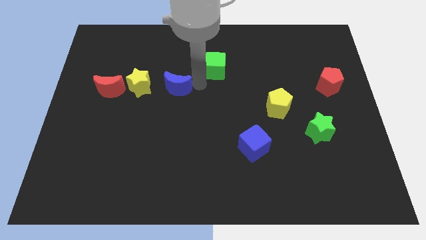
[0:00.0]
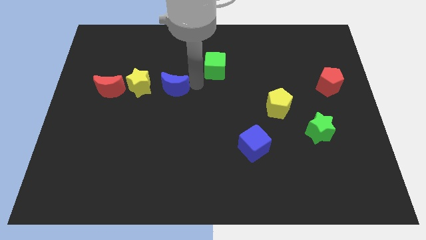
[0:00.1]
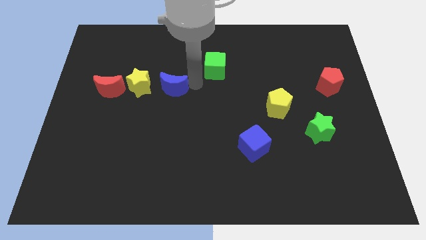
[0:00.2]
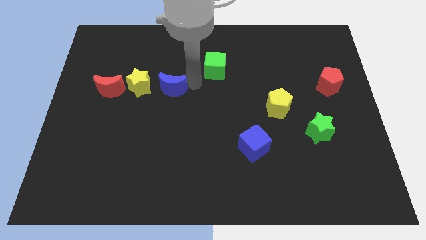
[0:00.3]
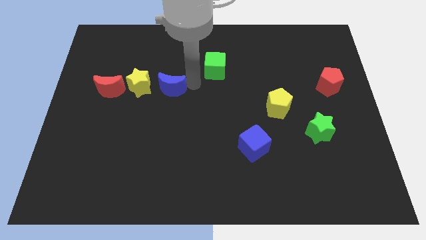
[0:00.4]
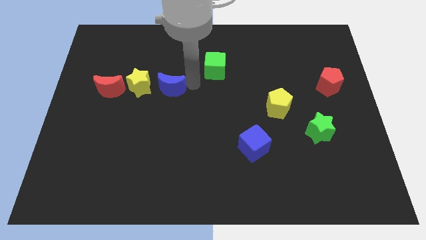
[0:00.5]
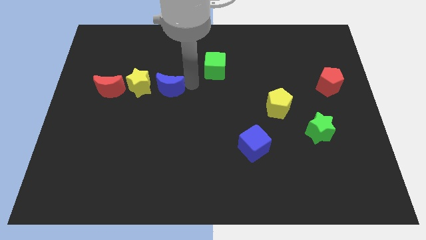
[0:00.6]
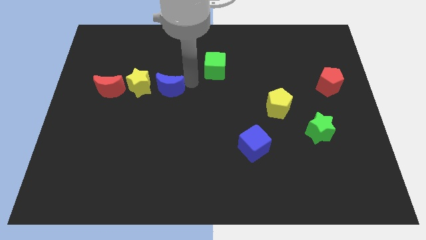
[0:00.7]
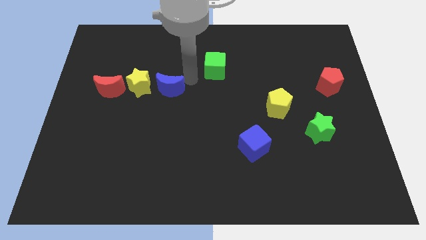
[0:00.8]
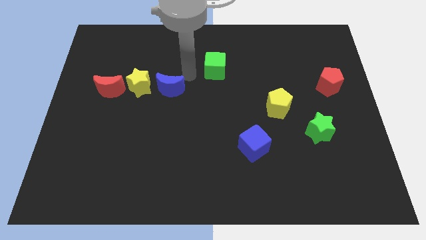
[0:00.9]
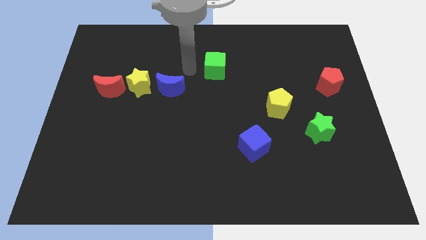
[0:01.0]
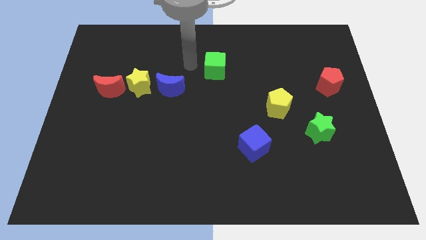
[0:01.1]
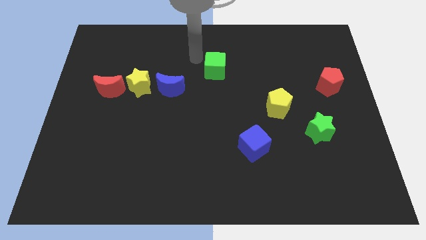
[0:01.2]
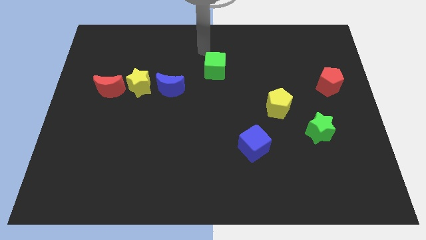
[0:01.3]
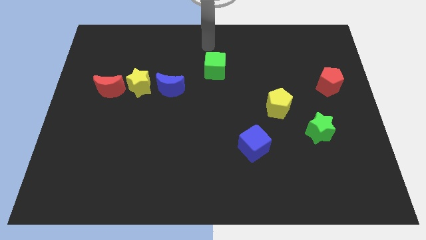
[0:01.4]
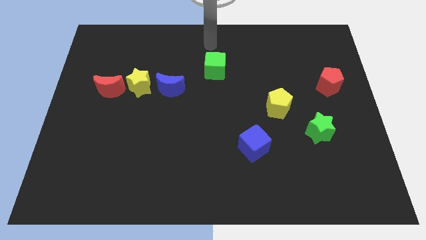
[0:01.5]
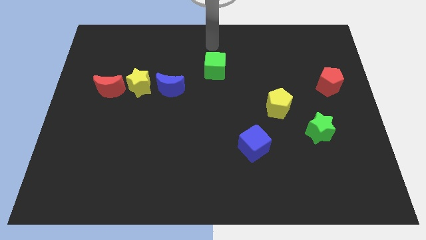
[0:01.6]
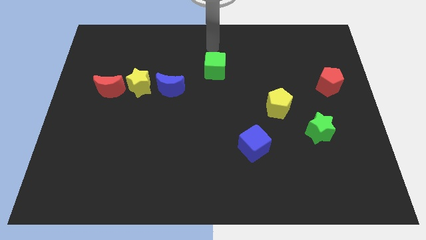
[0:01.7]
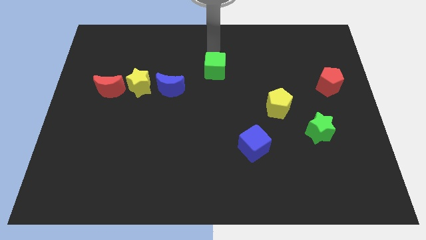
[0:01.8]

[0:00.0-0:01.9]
move the blue moon slightly to the left

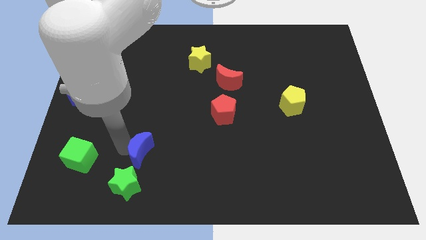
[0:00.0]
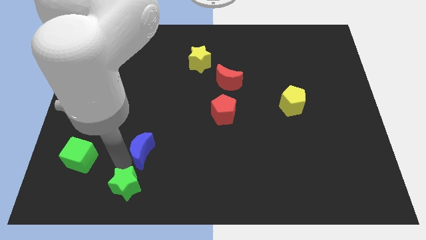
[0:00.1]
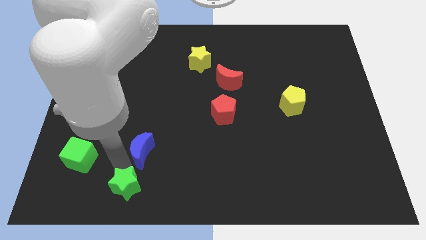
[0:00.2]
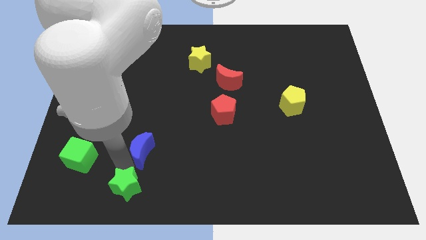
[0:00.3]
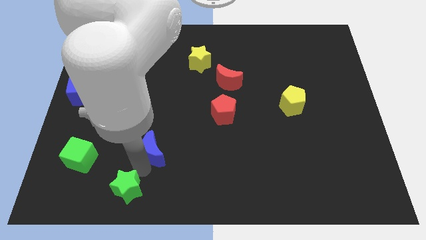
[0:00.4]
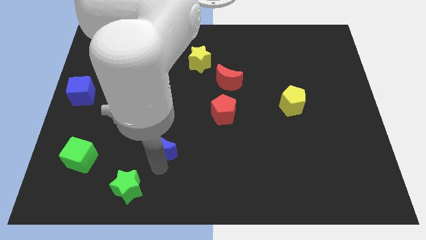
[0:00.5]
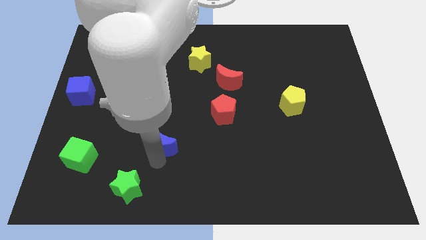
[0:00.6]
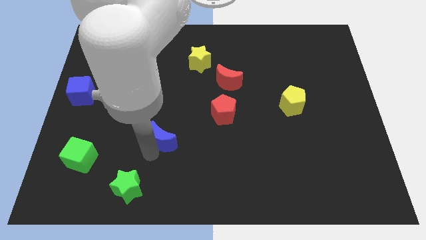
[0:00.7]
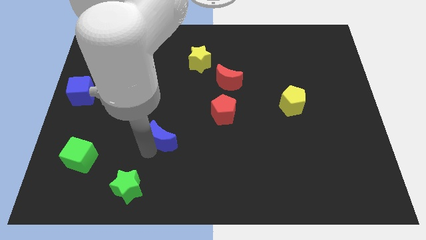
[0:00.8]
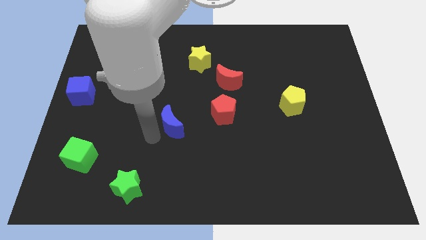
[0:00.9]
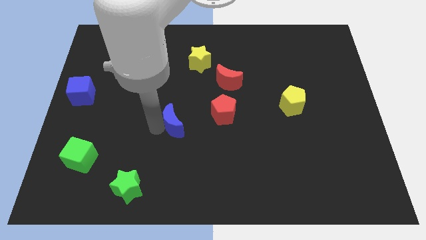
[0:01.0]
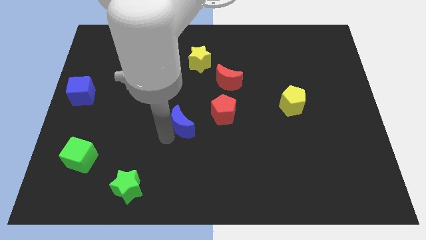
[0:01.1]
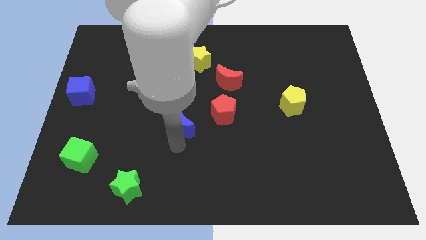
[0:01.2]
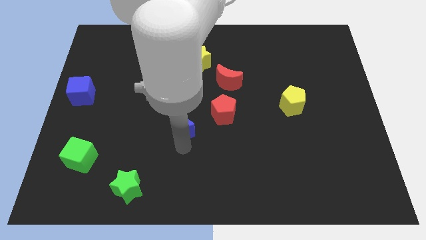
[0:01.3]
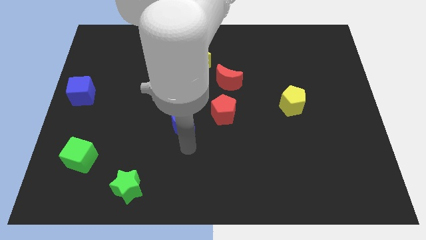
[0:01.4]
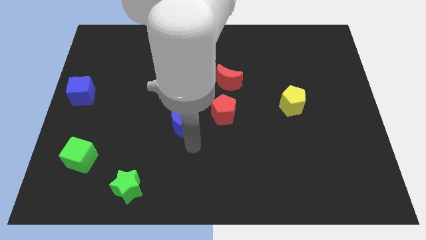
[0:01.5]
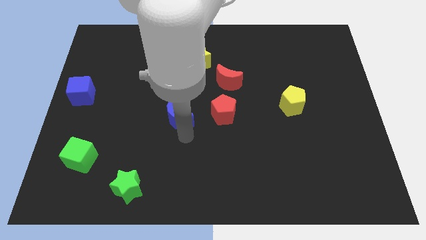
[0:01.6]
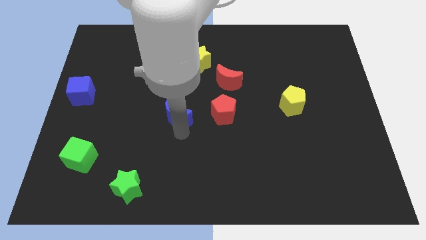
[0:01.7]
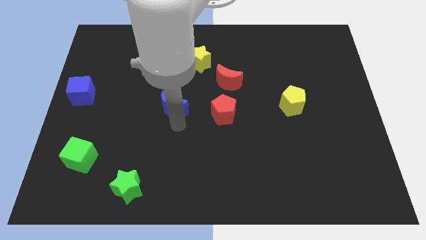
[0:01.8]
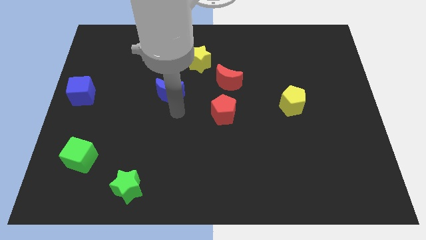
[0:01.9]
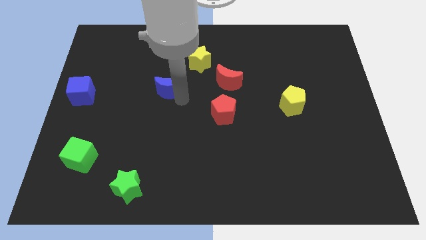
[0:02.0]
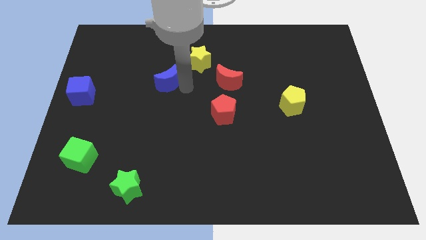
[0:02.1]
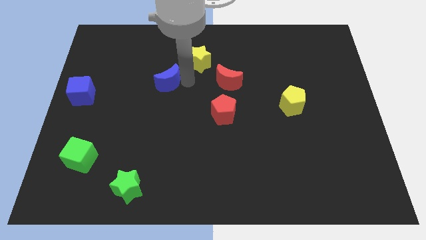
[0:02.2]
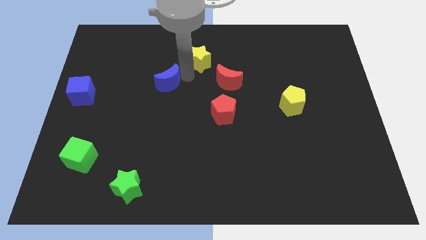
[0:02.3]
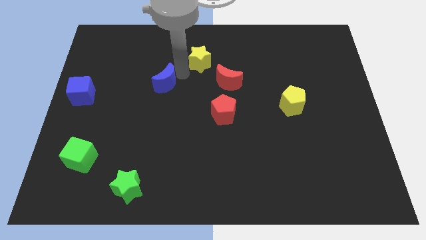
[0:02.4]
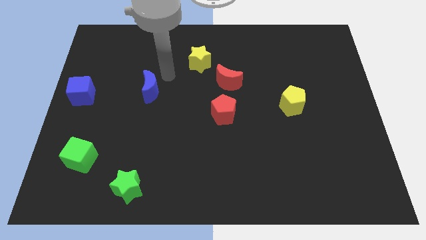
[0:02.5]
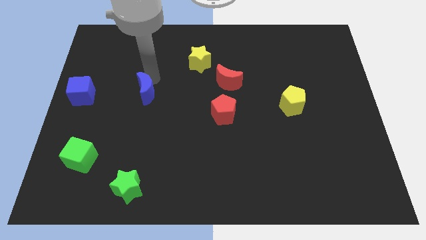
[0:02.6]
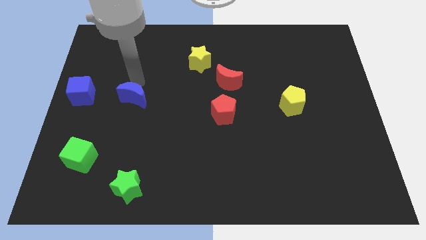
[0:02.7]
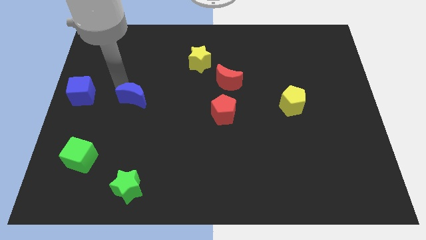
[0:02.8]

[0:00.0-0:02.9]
place the blue moon to the right side of blue cube

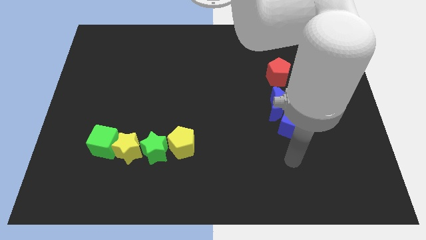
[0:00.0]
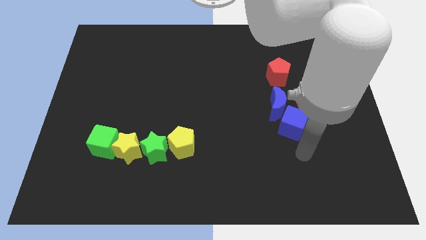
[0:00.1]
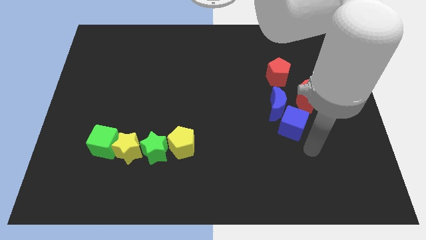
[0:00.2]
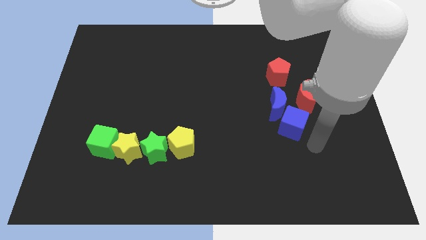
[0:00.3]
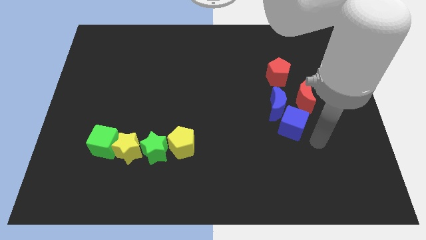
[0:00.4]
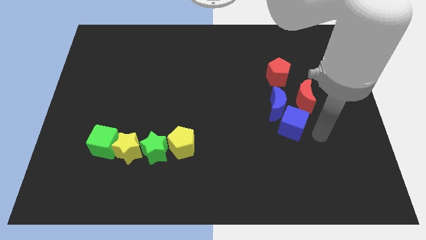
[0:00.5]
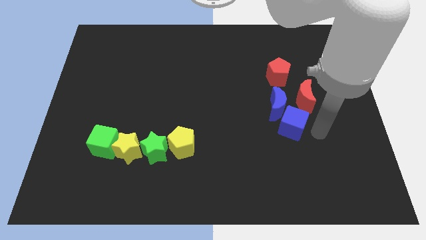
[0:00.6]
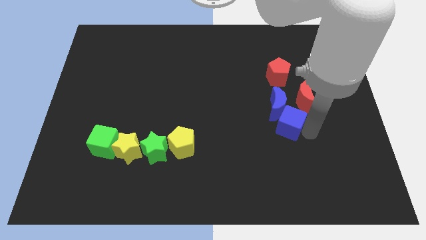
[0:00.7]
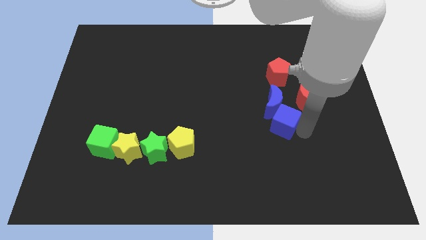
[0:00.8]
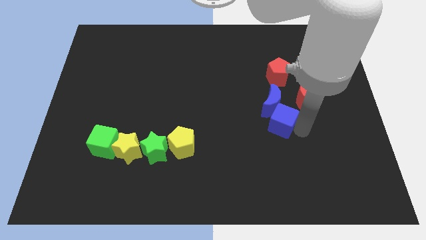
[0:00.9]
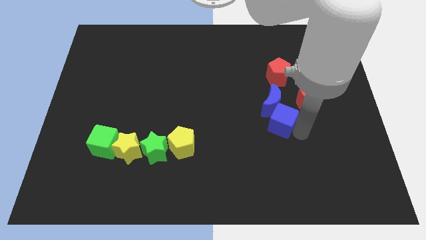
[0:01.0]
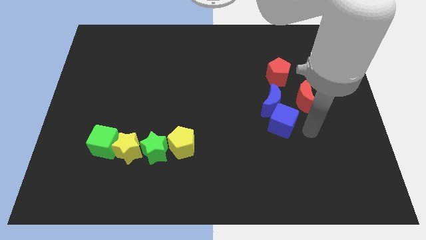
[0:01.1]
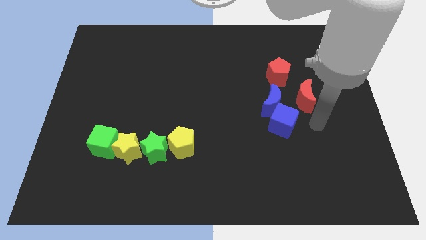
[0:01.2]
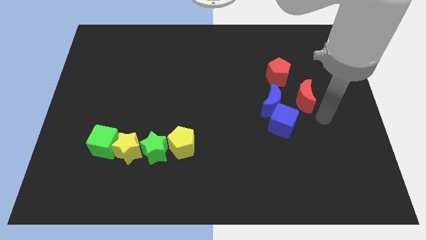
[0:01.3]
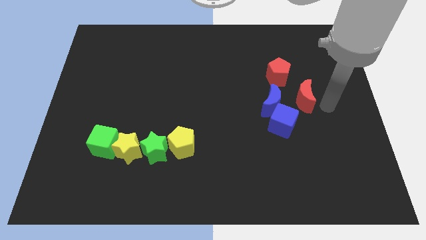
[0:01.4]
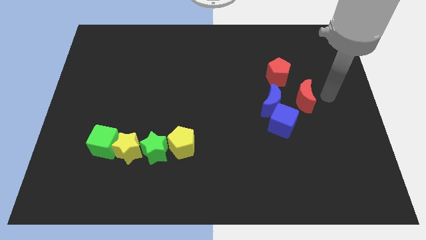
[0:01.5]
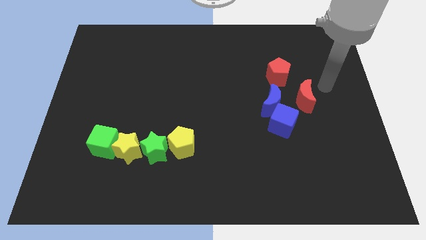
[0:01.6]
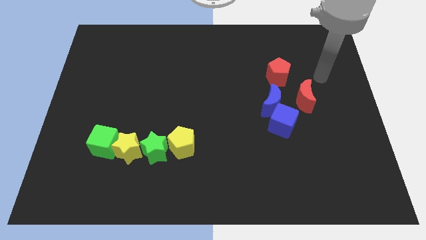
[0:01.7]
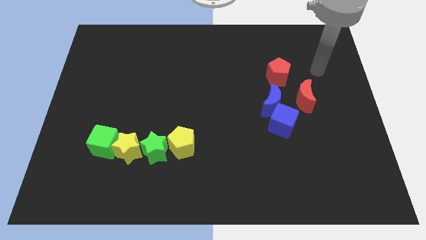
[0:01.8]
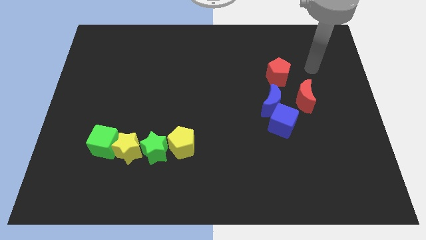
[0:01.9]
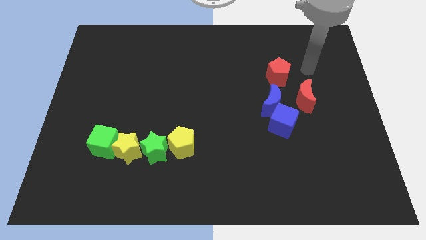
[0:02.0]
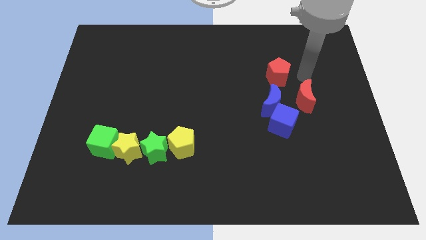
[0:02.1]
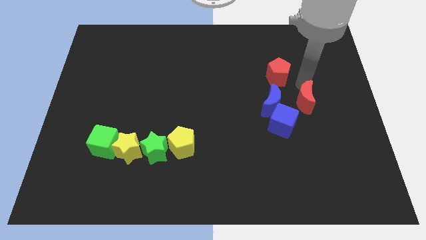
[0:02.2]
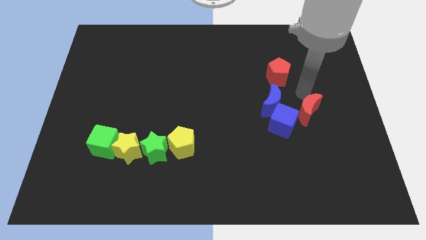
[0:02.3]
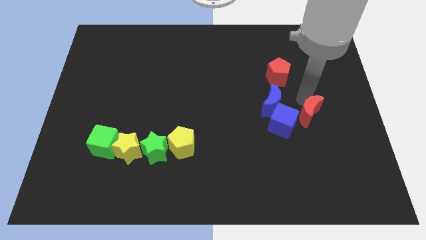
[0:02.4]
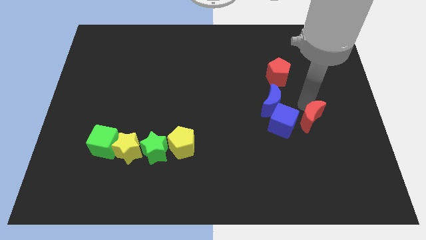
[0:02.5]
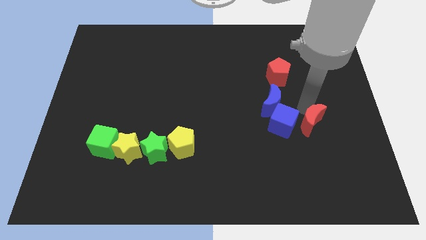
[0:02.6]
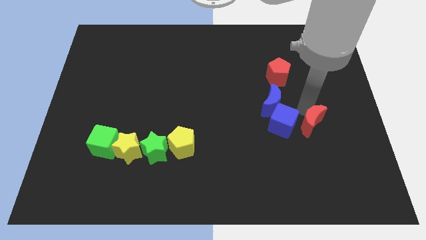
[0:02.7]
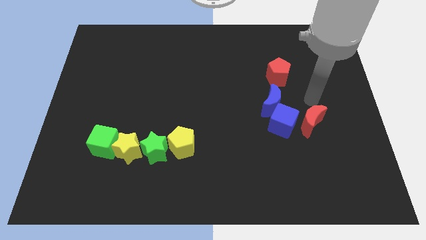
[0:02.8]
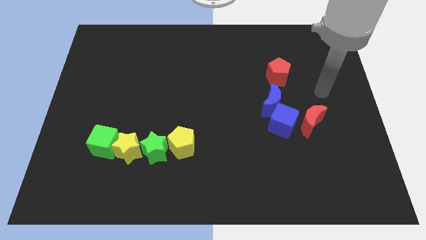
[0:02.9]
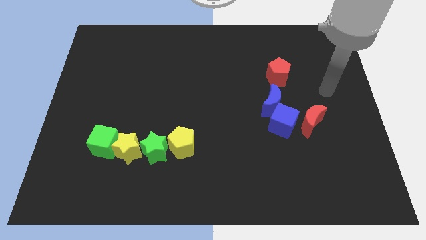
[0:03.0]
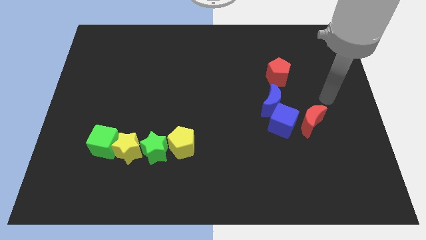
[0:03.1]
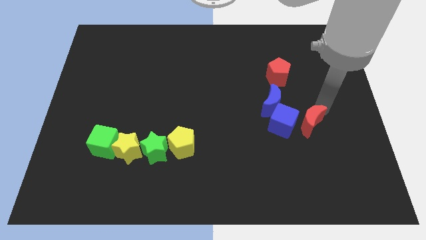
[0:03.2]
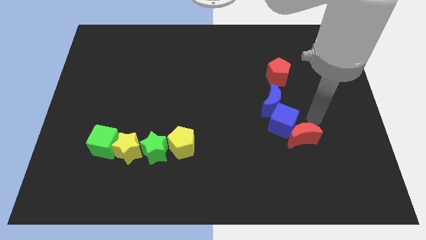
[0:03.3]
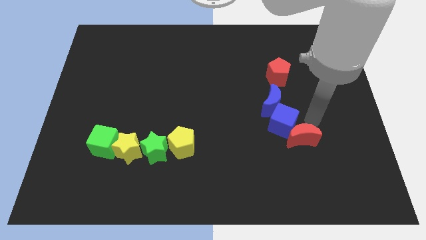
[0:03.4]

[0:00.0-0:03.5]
move the red crescent below blue cube

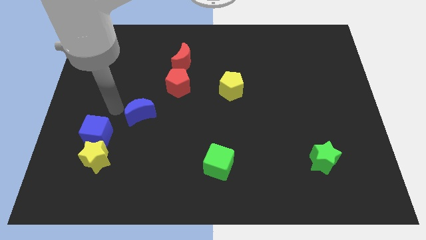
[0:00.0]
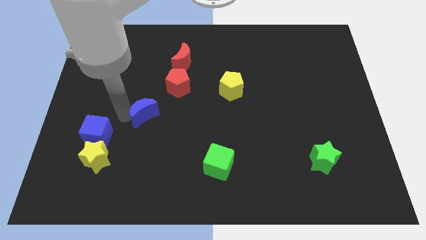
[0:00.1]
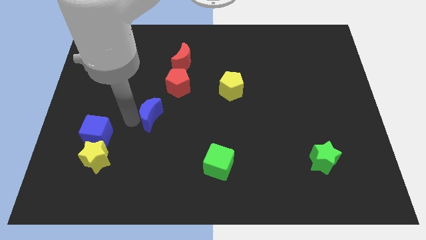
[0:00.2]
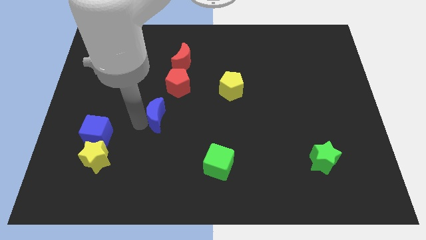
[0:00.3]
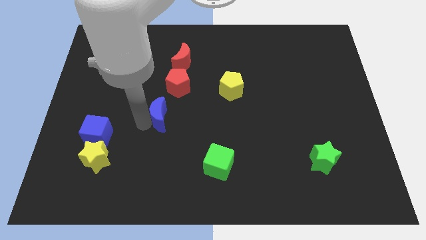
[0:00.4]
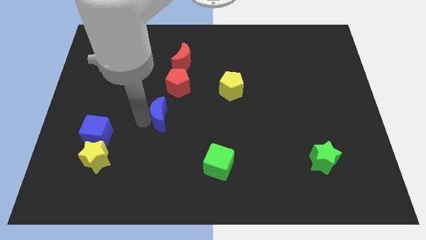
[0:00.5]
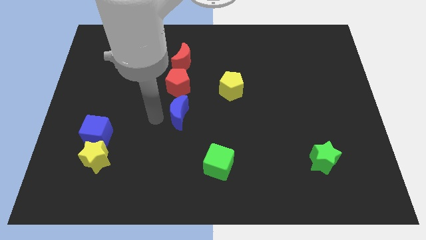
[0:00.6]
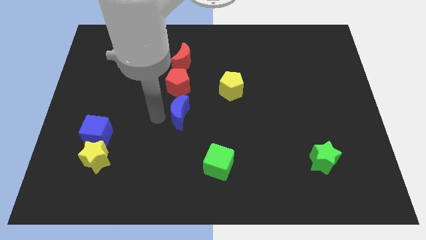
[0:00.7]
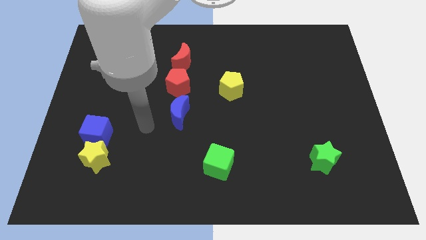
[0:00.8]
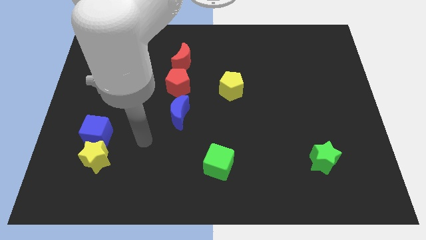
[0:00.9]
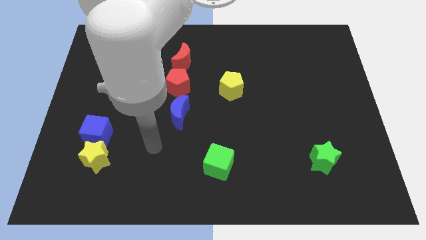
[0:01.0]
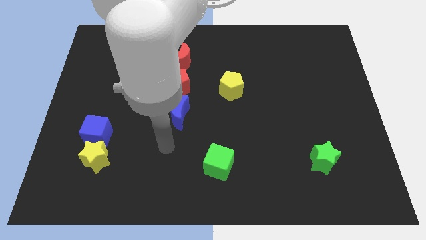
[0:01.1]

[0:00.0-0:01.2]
push the blue crescent vertically bottom to the red pentagon
